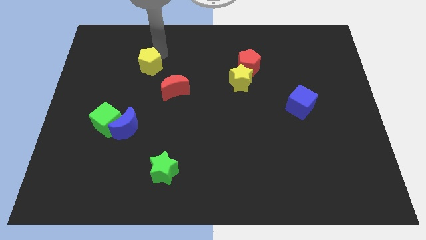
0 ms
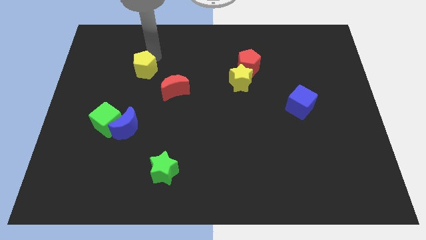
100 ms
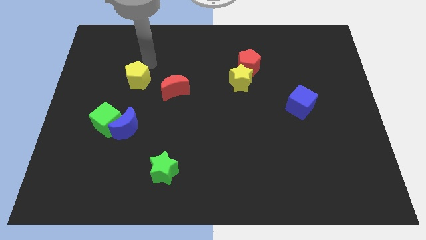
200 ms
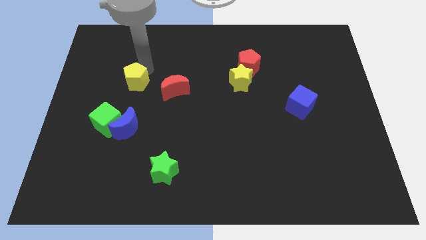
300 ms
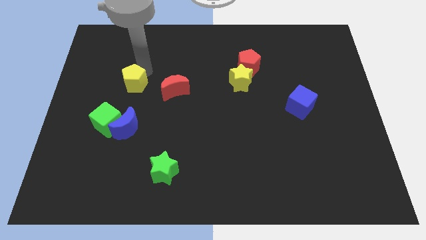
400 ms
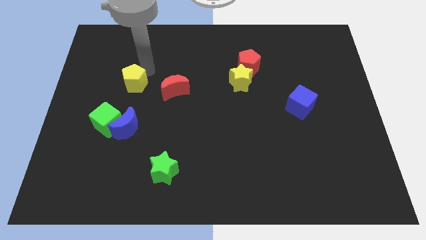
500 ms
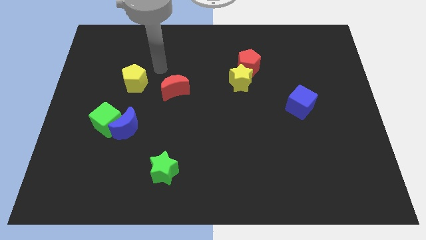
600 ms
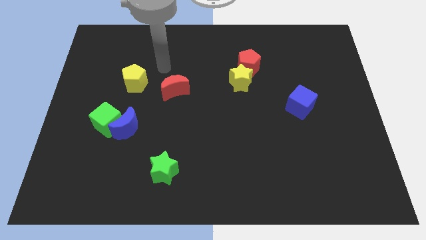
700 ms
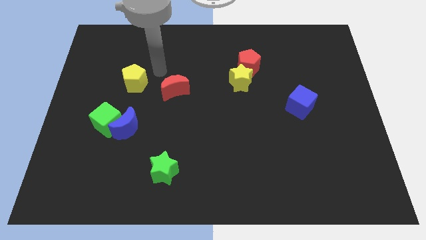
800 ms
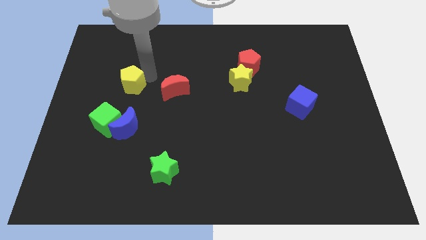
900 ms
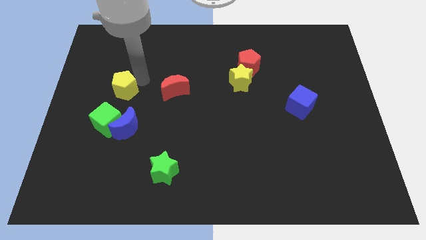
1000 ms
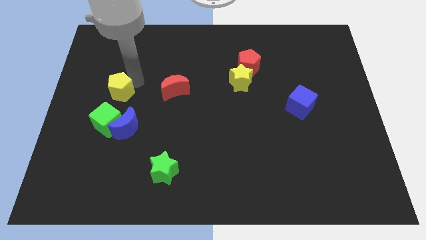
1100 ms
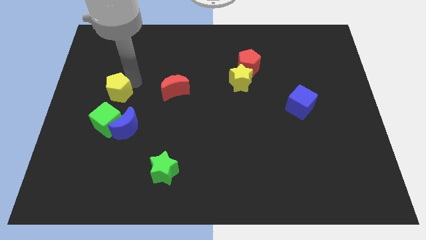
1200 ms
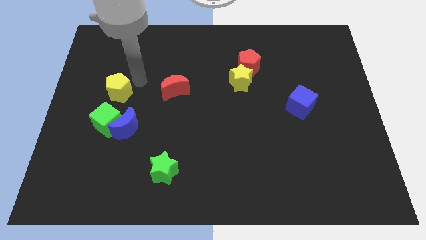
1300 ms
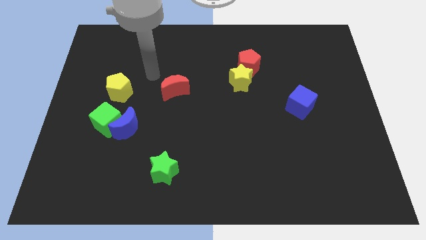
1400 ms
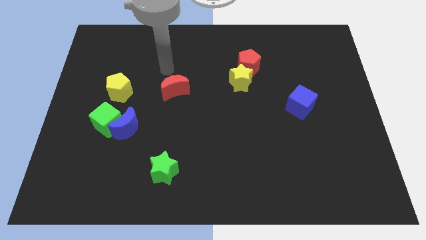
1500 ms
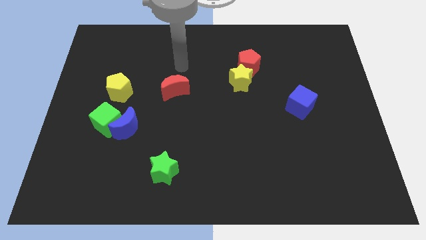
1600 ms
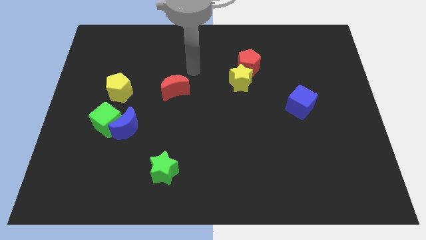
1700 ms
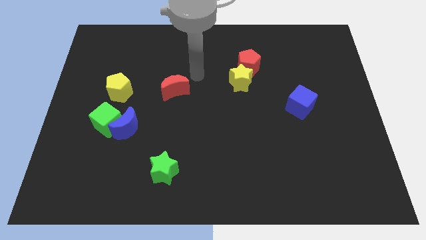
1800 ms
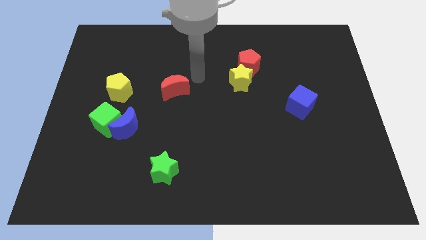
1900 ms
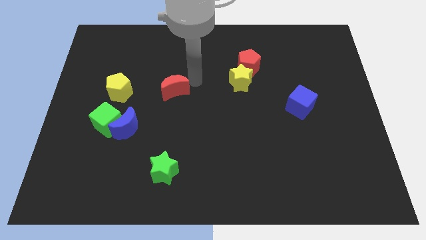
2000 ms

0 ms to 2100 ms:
move the yellow pentagon towards down

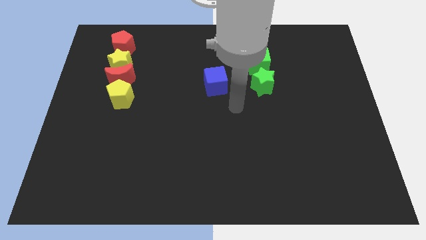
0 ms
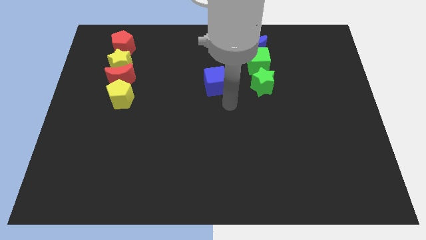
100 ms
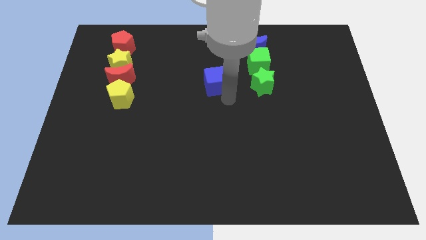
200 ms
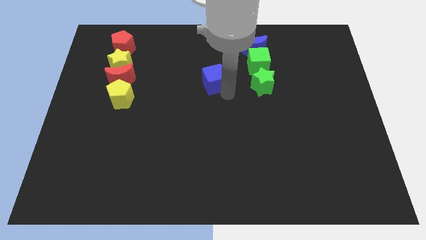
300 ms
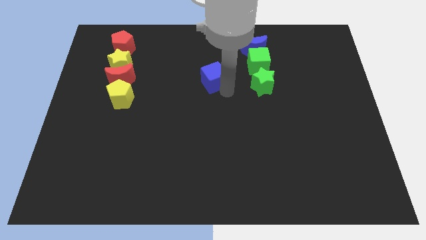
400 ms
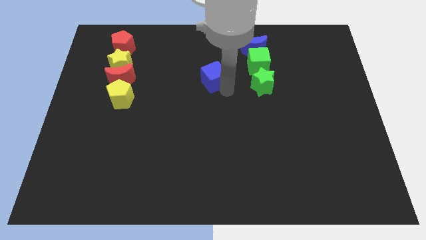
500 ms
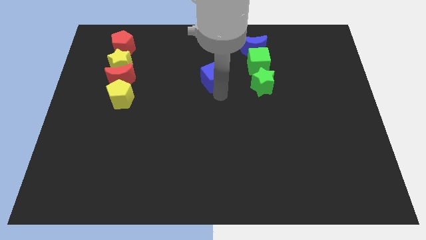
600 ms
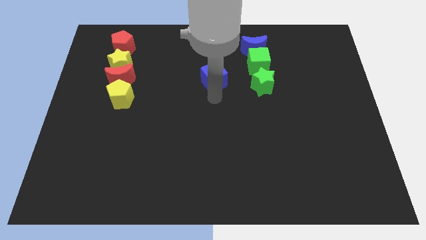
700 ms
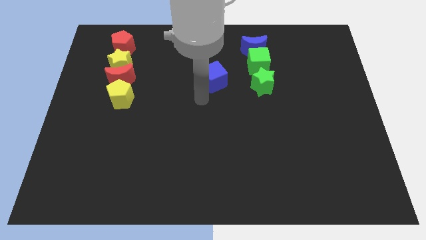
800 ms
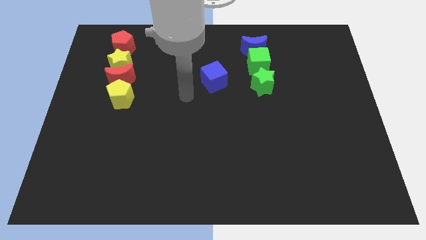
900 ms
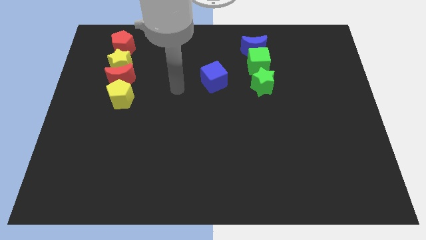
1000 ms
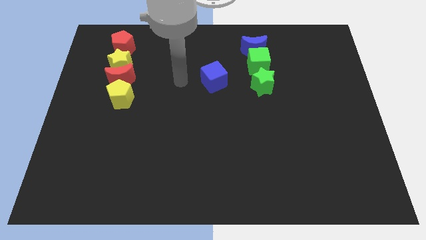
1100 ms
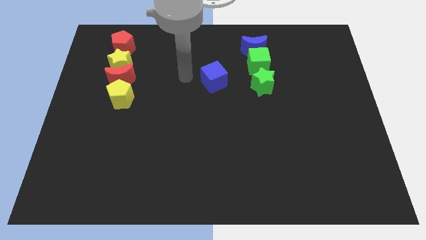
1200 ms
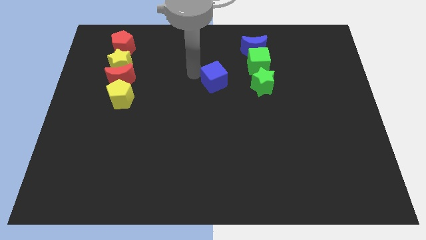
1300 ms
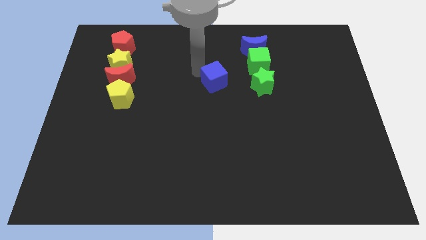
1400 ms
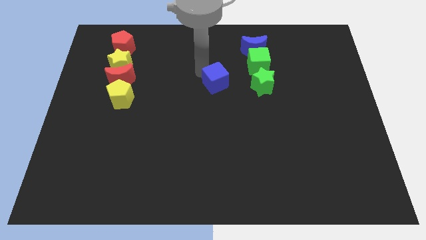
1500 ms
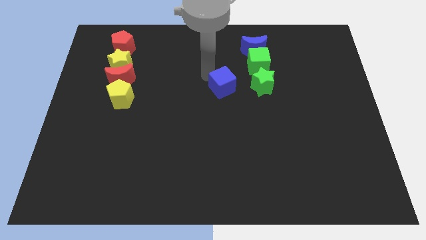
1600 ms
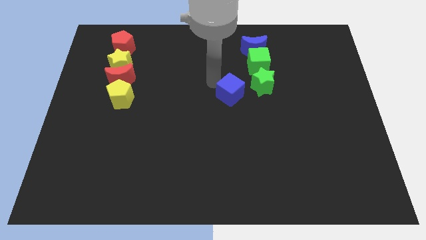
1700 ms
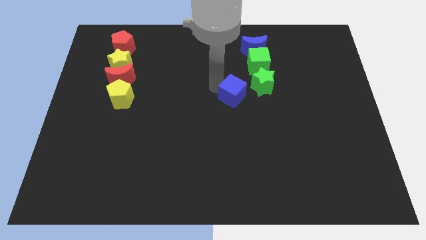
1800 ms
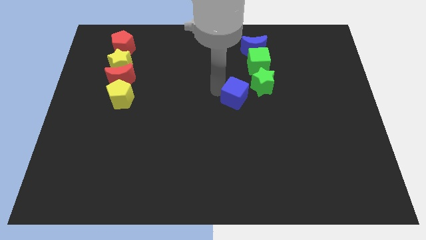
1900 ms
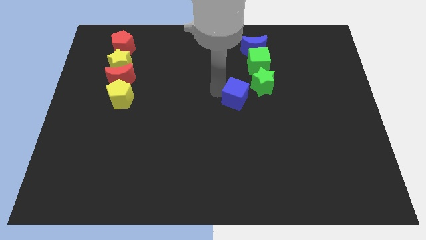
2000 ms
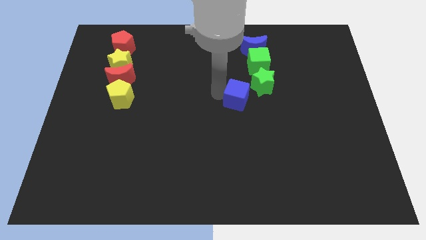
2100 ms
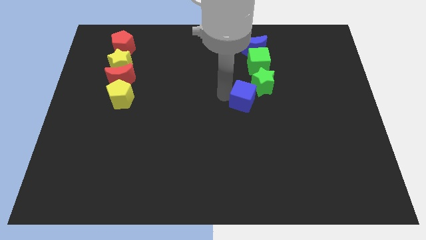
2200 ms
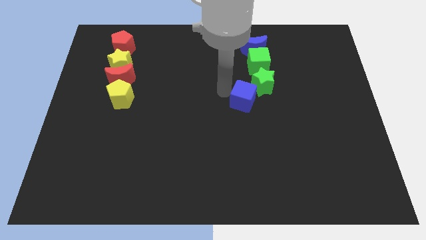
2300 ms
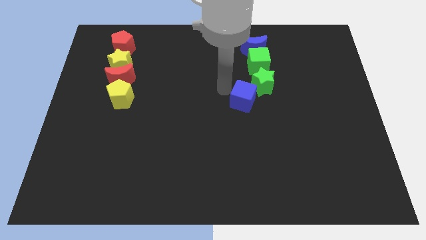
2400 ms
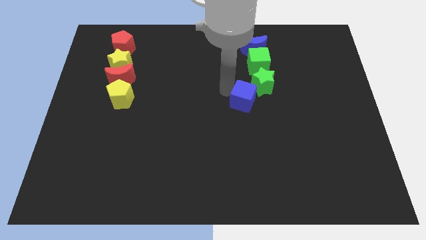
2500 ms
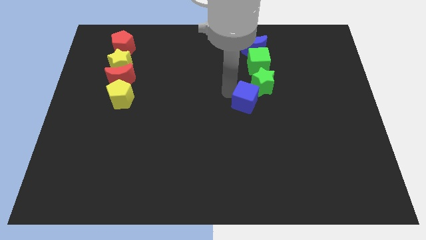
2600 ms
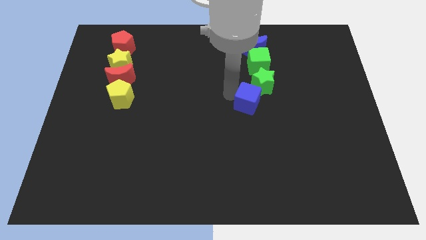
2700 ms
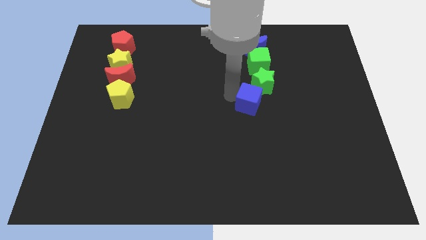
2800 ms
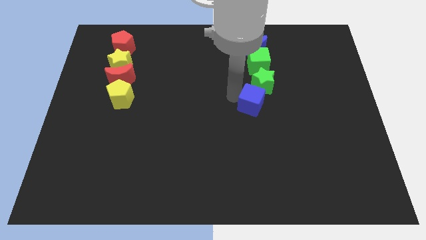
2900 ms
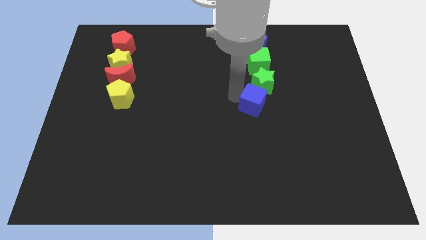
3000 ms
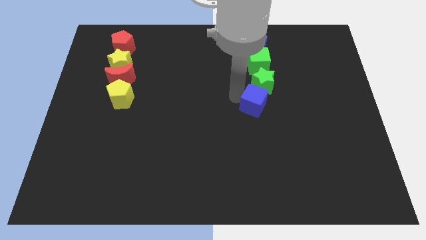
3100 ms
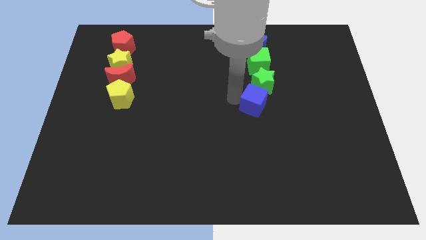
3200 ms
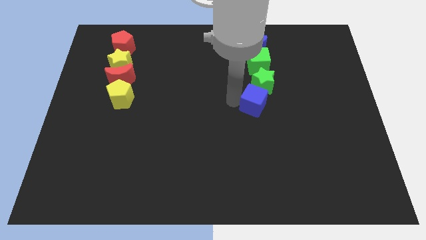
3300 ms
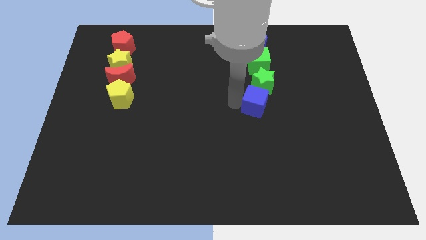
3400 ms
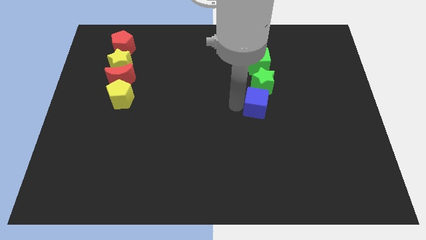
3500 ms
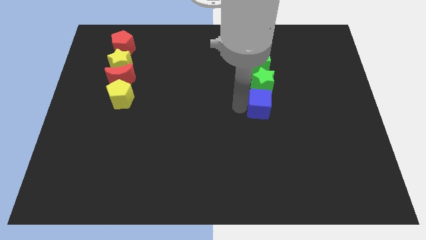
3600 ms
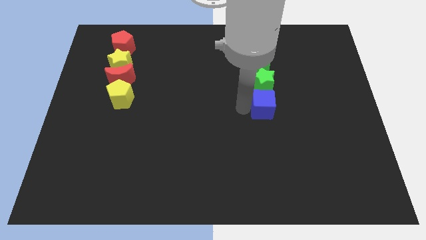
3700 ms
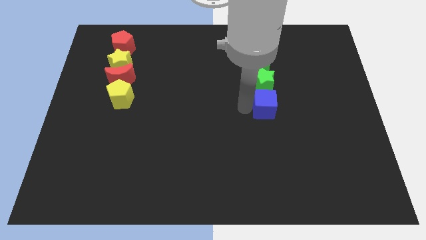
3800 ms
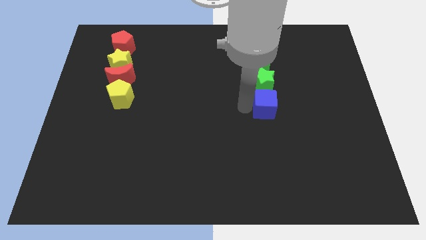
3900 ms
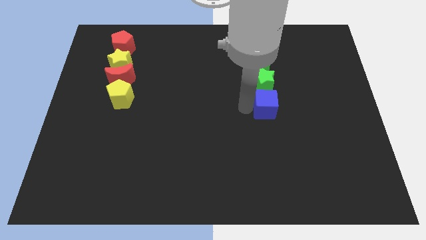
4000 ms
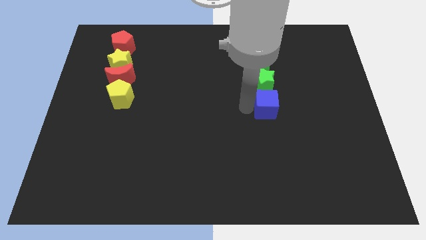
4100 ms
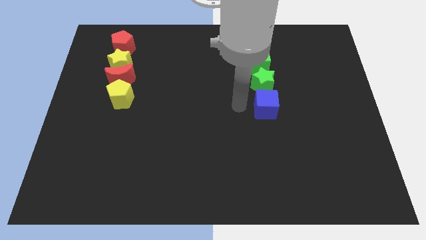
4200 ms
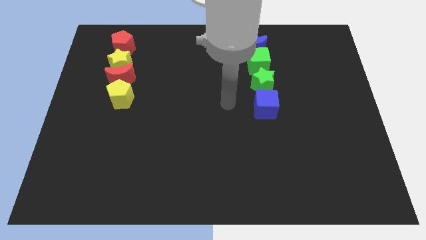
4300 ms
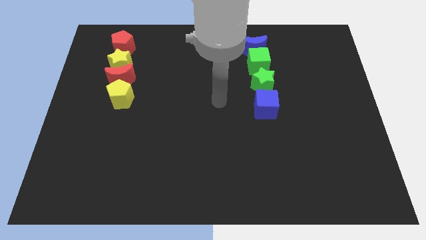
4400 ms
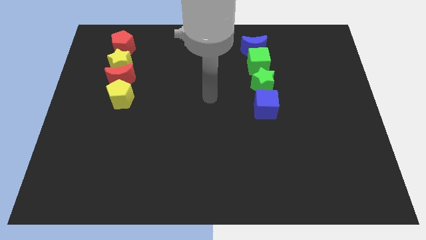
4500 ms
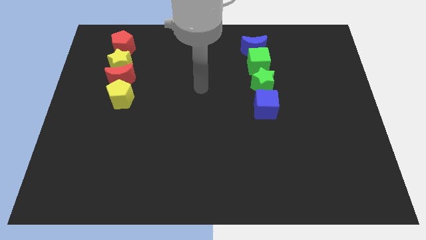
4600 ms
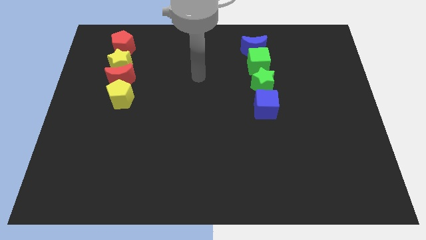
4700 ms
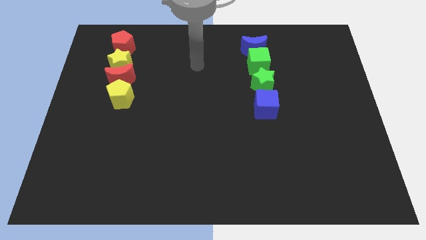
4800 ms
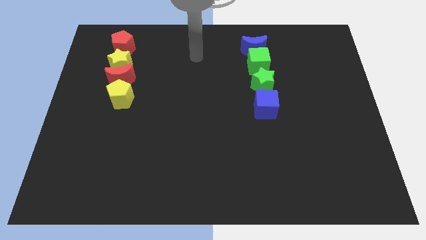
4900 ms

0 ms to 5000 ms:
move the blue cube below the green star

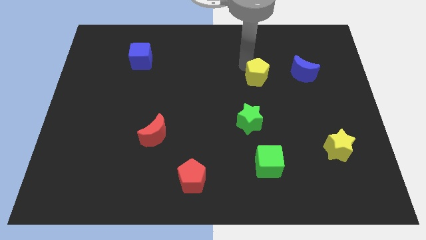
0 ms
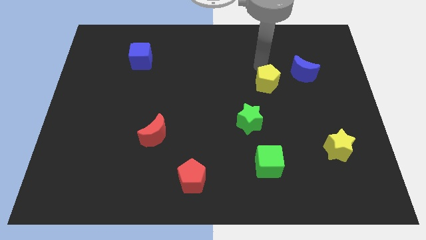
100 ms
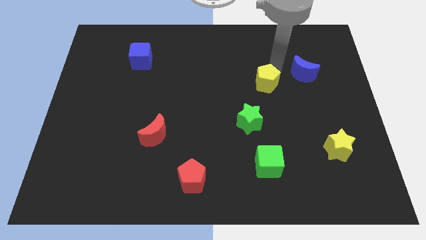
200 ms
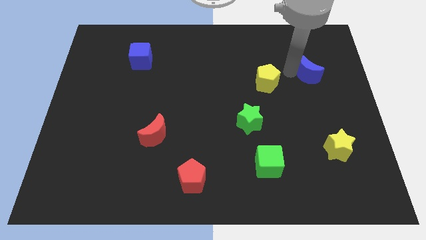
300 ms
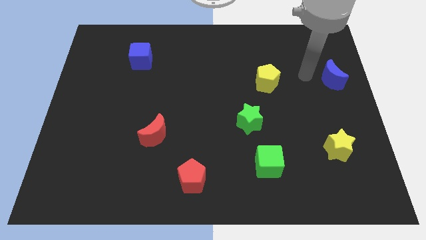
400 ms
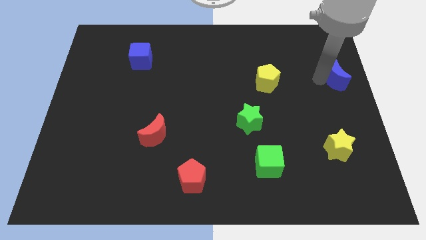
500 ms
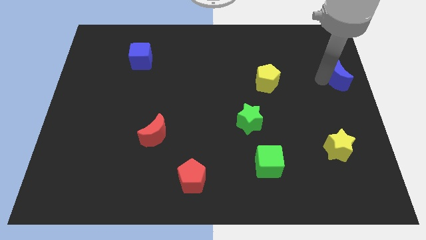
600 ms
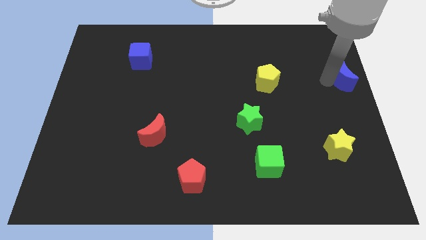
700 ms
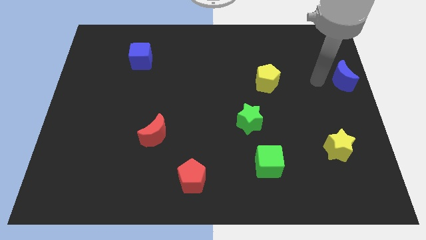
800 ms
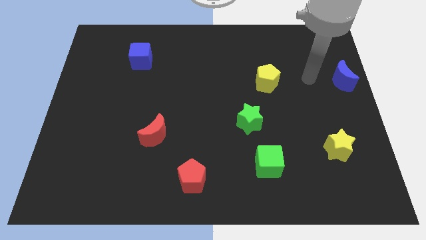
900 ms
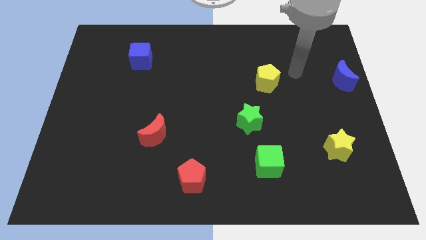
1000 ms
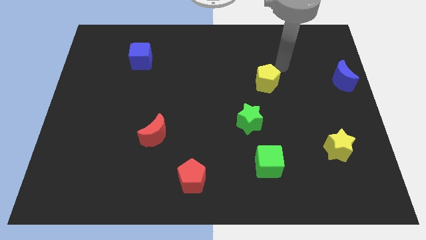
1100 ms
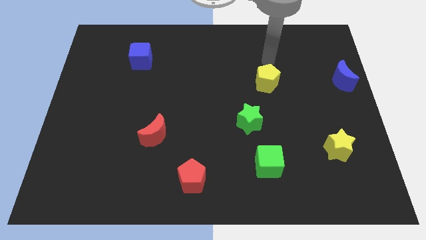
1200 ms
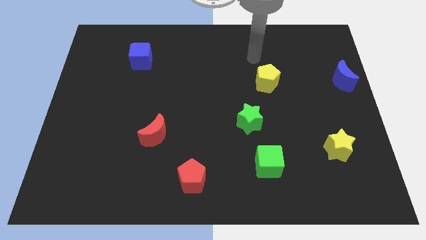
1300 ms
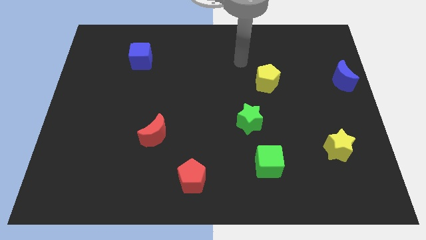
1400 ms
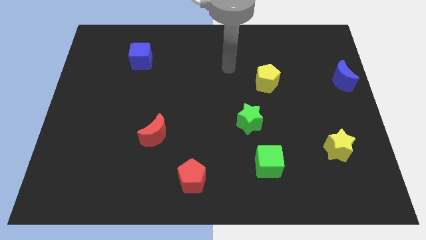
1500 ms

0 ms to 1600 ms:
move the blue moon to the right

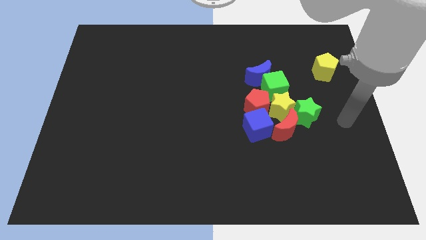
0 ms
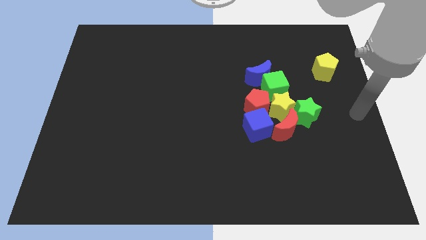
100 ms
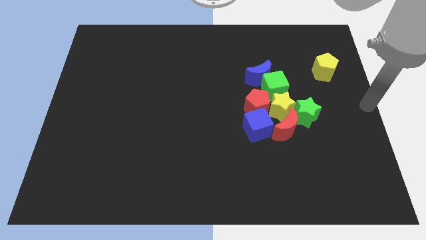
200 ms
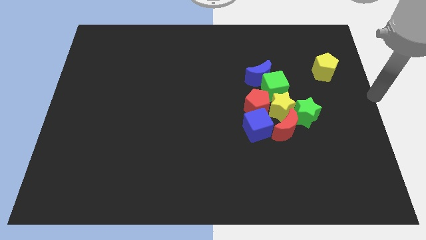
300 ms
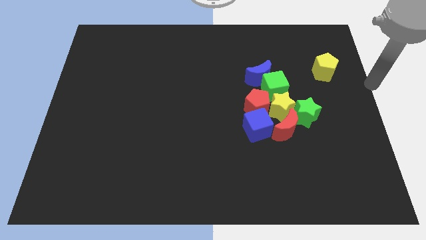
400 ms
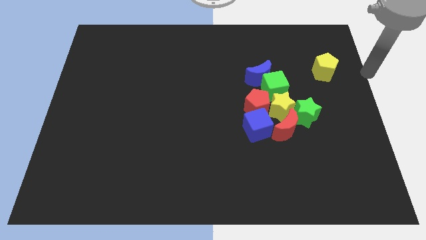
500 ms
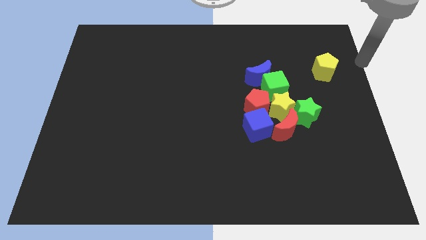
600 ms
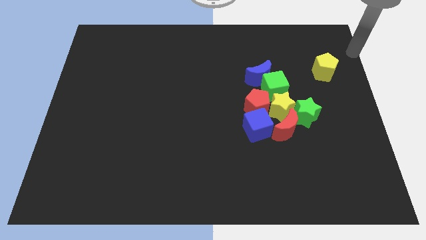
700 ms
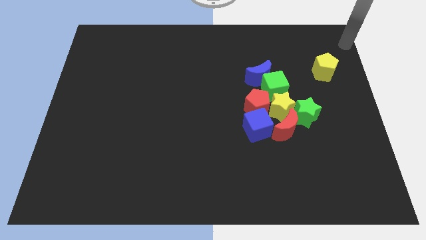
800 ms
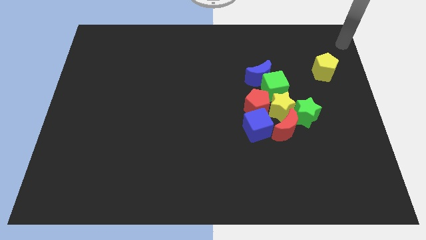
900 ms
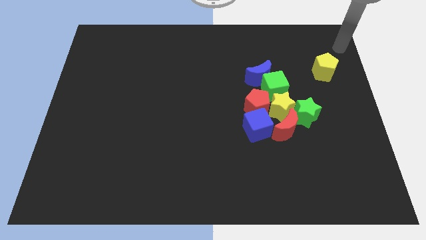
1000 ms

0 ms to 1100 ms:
move your arm away from the green star
